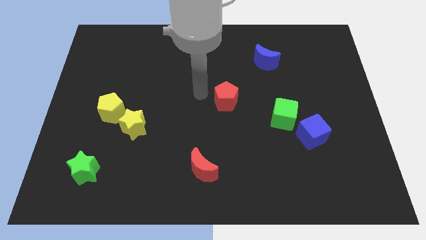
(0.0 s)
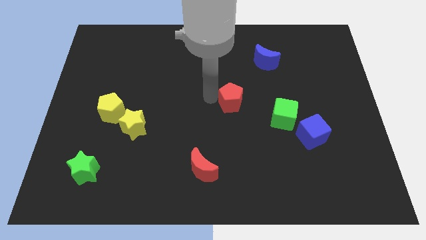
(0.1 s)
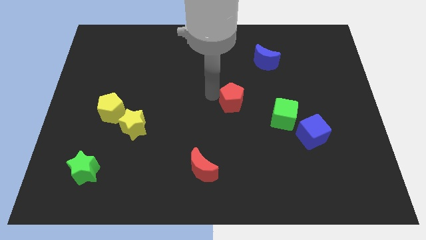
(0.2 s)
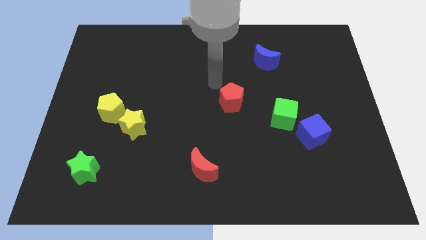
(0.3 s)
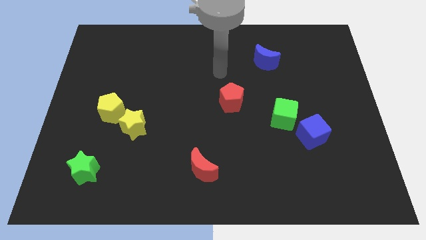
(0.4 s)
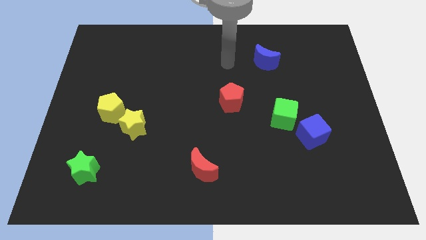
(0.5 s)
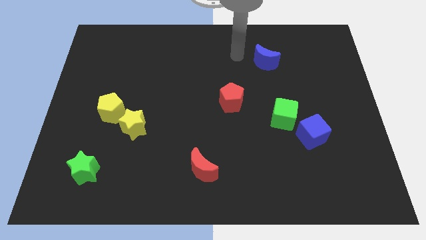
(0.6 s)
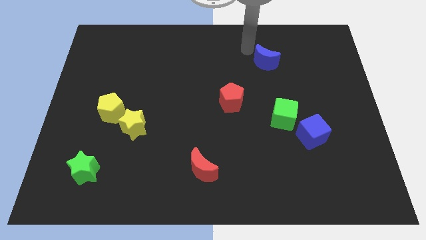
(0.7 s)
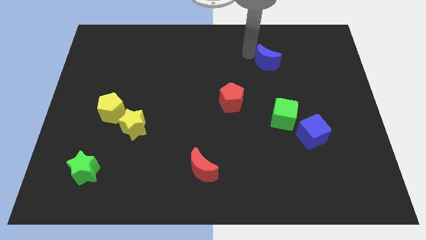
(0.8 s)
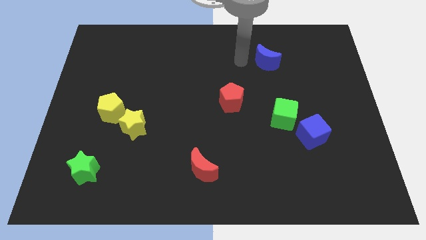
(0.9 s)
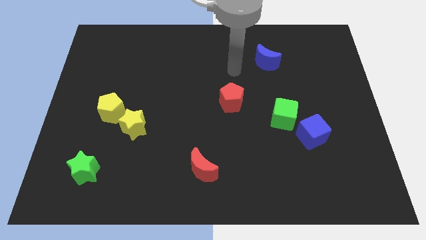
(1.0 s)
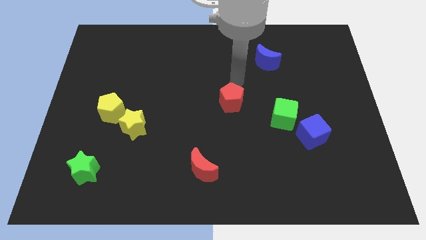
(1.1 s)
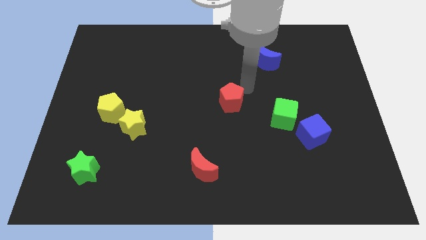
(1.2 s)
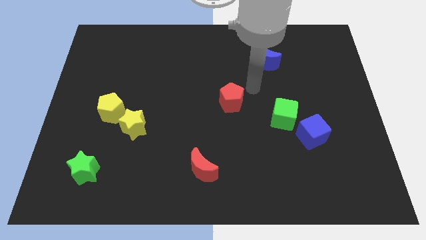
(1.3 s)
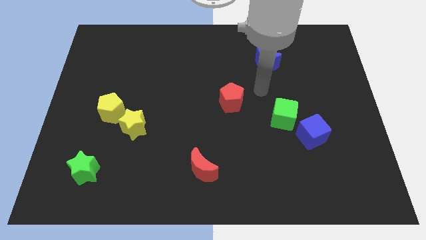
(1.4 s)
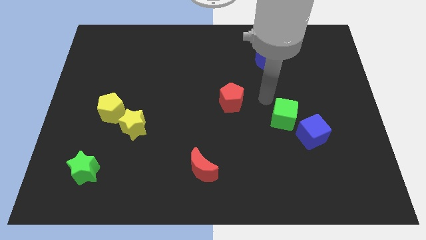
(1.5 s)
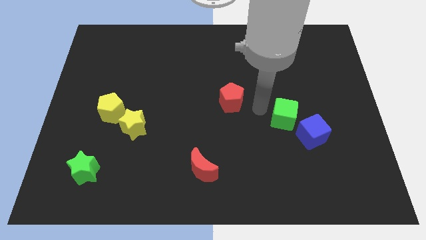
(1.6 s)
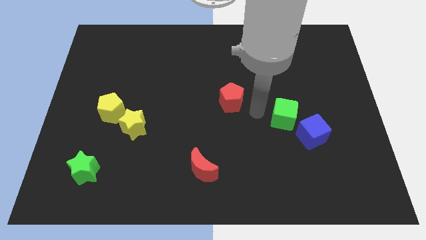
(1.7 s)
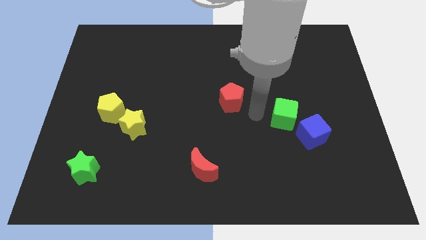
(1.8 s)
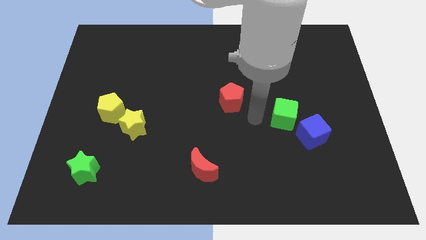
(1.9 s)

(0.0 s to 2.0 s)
move the red pentagon slightly to the right

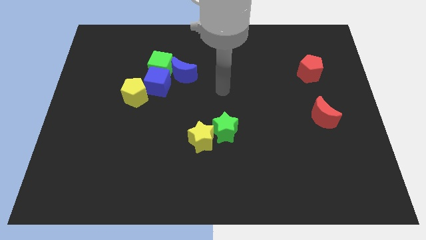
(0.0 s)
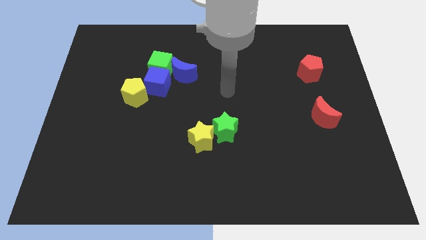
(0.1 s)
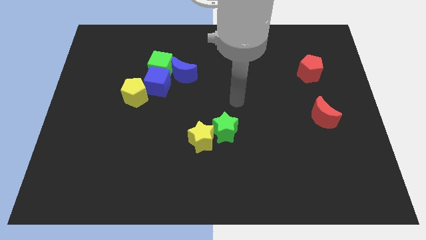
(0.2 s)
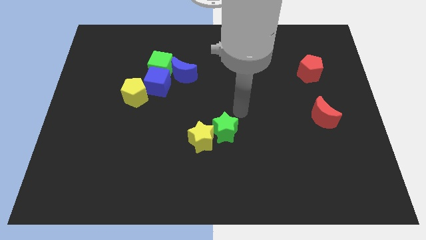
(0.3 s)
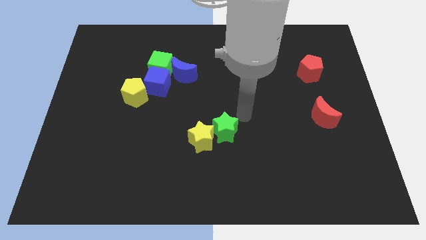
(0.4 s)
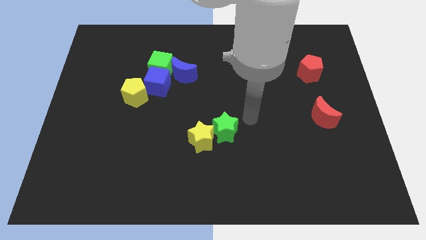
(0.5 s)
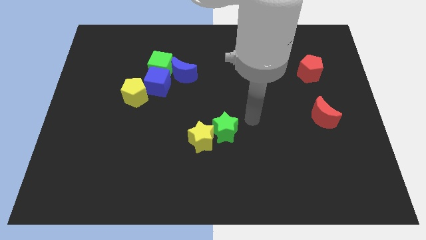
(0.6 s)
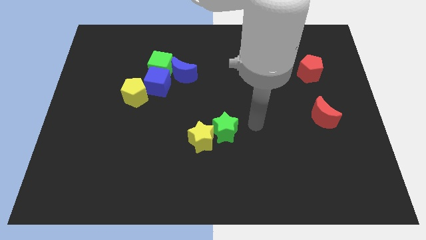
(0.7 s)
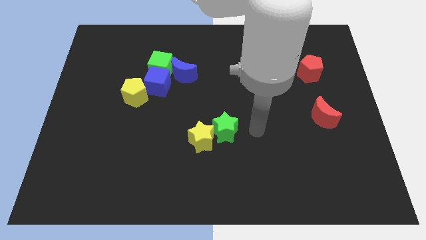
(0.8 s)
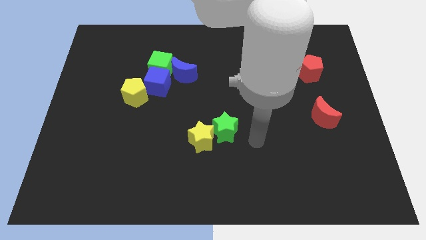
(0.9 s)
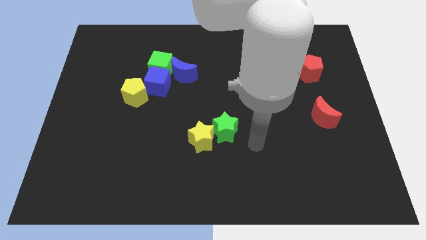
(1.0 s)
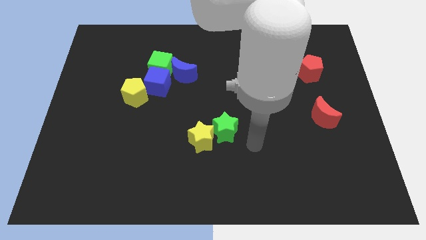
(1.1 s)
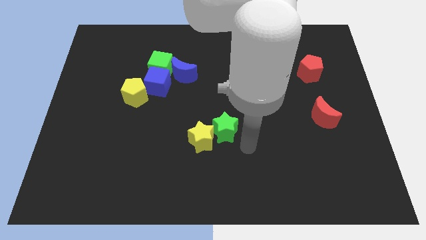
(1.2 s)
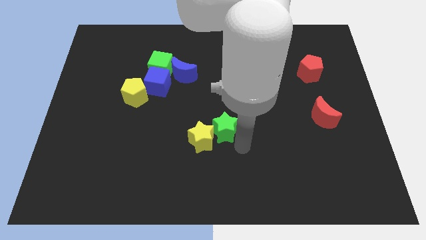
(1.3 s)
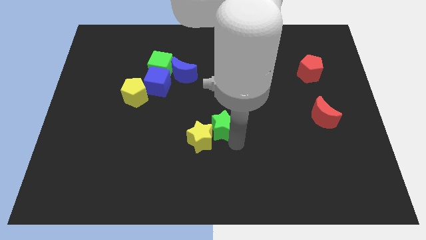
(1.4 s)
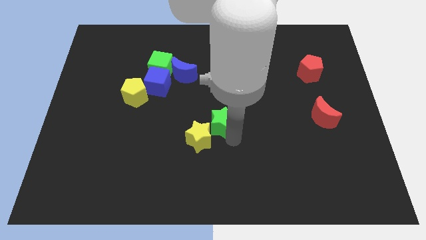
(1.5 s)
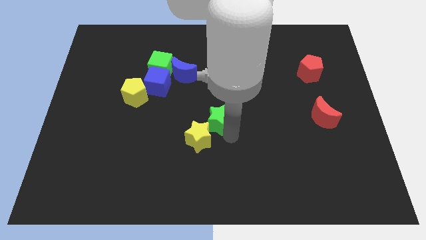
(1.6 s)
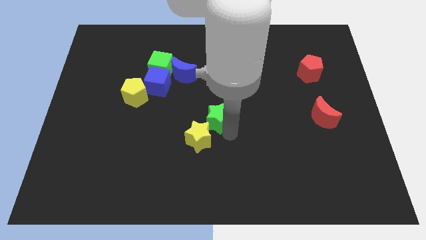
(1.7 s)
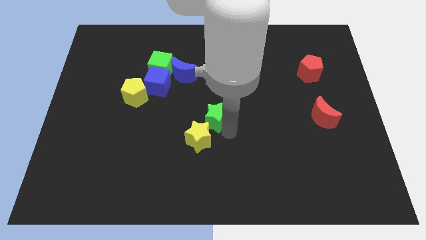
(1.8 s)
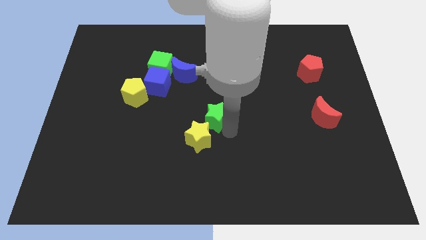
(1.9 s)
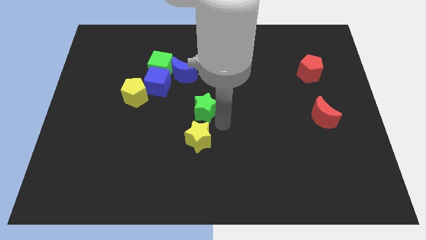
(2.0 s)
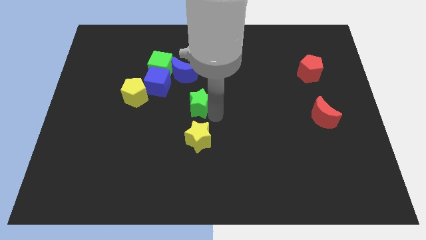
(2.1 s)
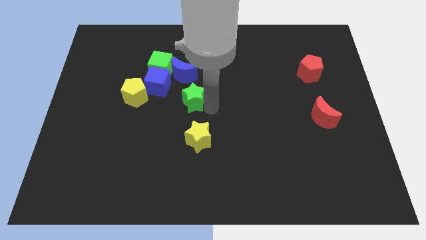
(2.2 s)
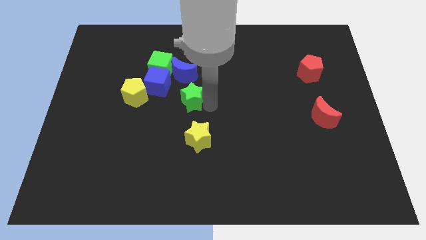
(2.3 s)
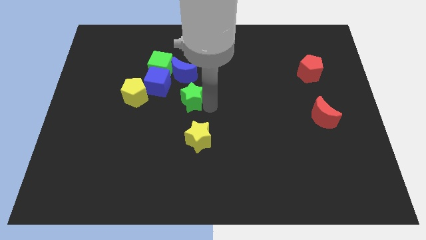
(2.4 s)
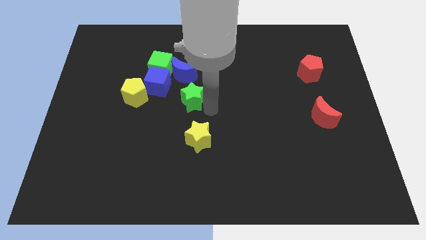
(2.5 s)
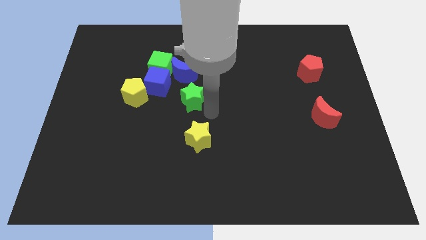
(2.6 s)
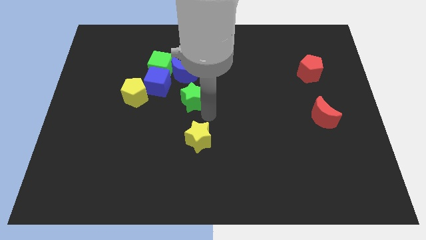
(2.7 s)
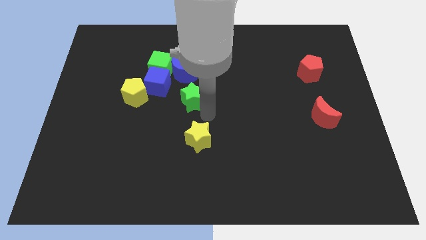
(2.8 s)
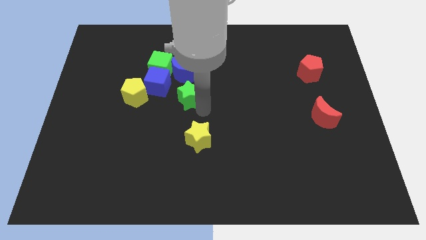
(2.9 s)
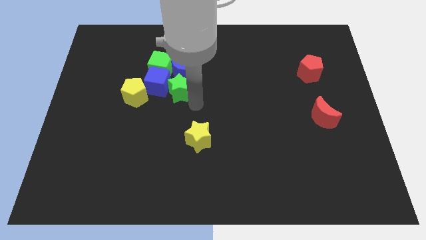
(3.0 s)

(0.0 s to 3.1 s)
move the green star close to the blue cube

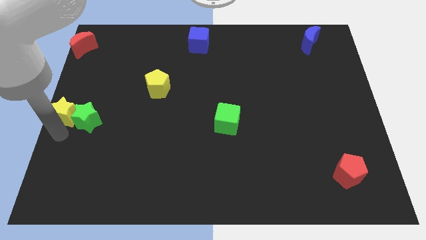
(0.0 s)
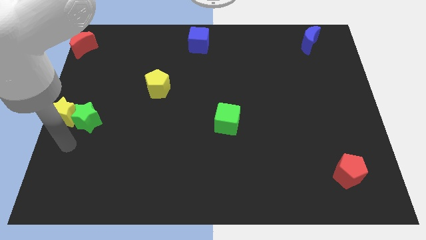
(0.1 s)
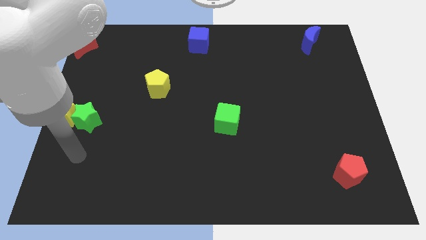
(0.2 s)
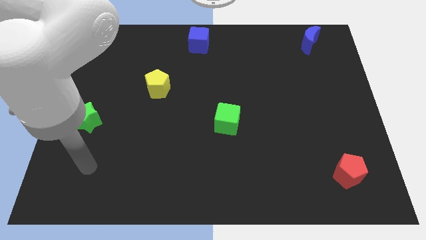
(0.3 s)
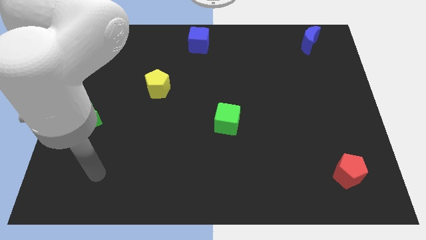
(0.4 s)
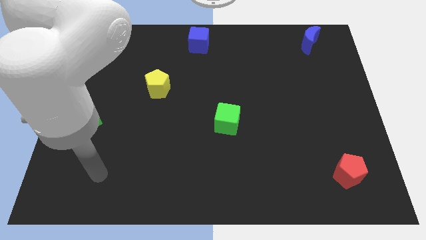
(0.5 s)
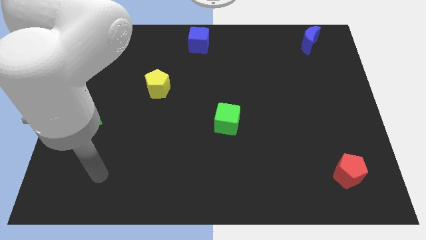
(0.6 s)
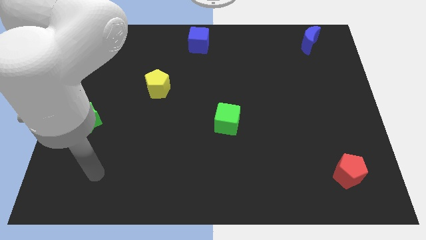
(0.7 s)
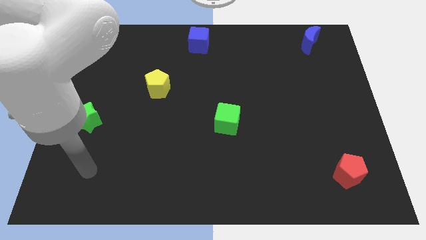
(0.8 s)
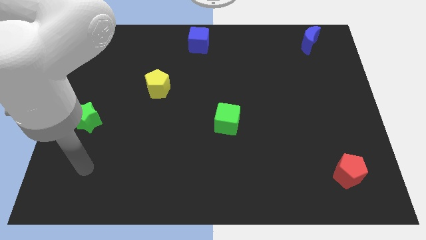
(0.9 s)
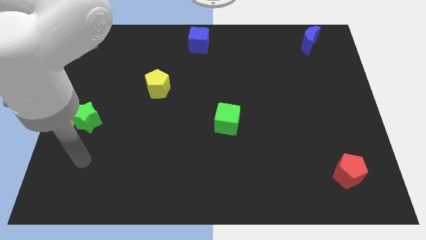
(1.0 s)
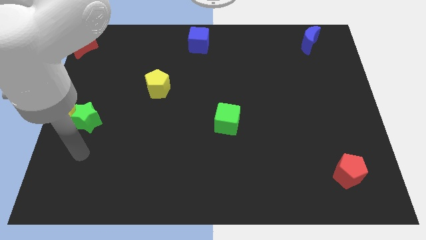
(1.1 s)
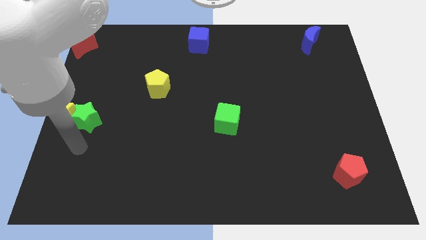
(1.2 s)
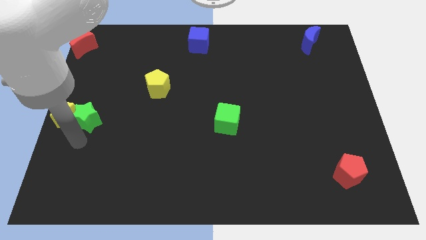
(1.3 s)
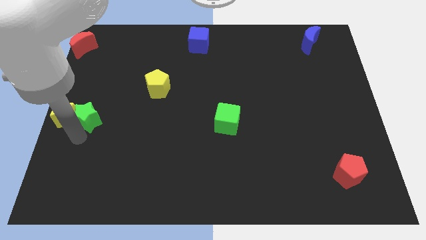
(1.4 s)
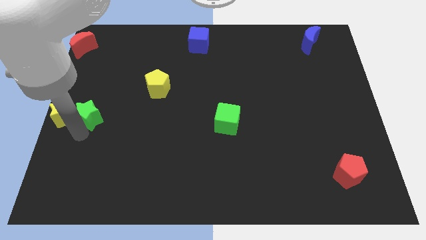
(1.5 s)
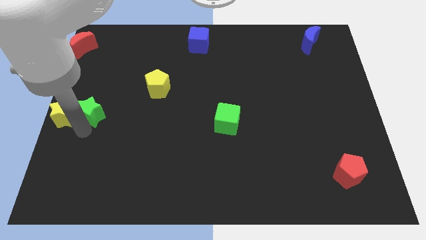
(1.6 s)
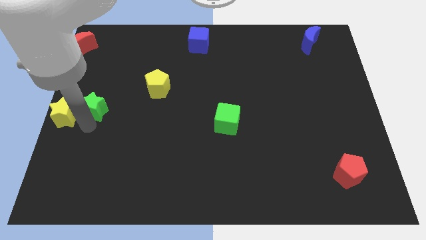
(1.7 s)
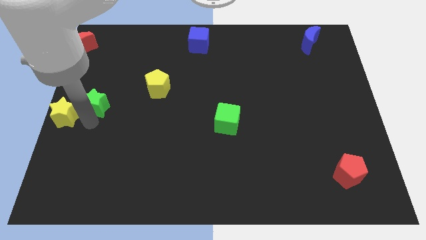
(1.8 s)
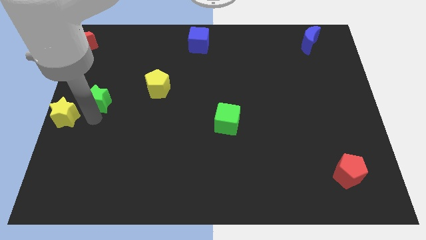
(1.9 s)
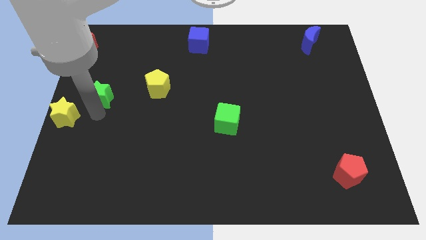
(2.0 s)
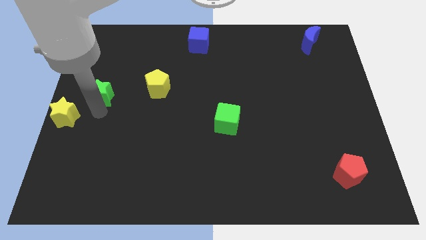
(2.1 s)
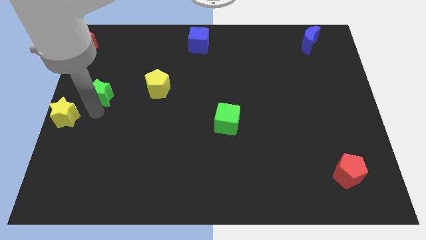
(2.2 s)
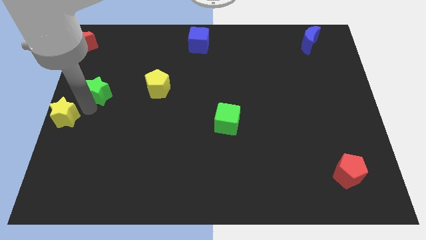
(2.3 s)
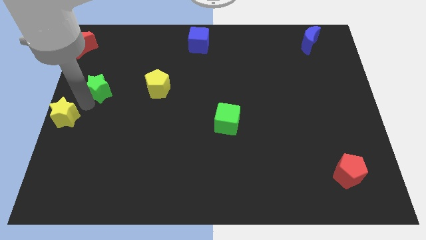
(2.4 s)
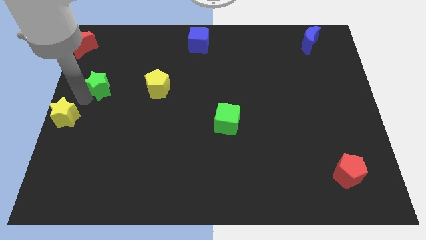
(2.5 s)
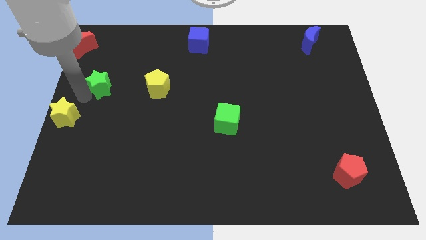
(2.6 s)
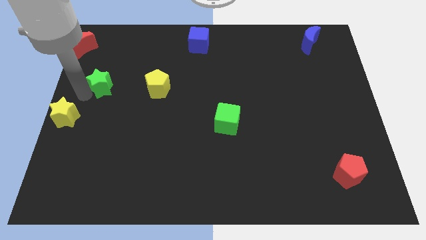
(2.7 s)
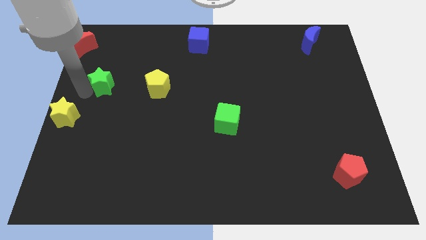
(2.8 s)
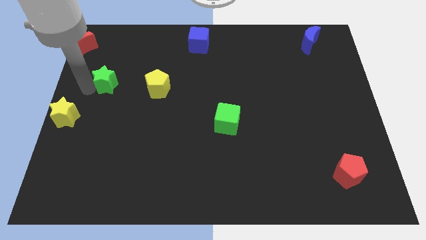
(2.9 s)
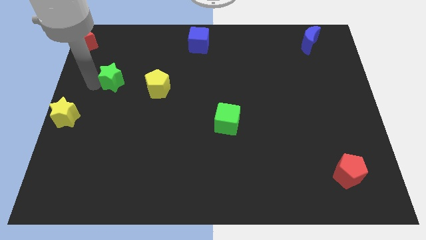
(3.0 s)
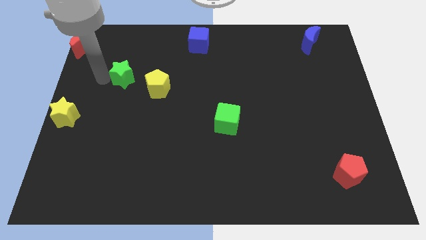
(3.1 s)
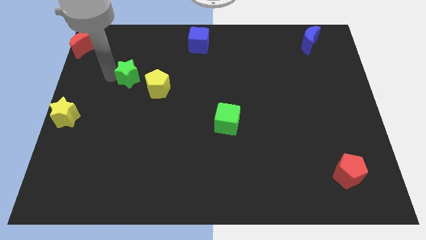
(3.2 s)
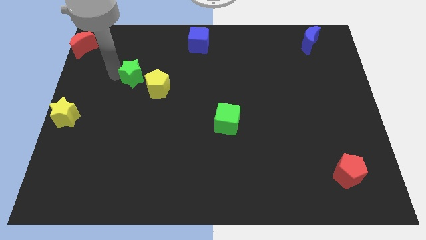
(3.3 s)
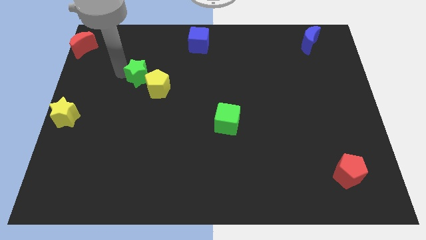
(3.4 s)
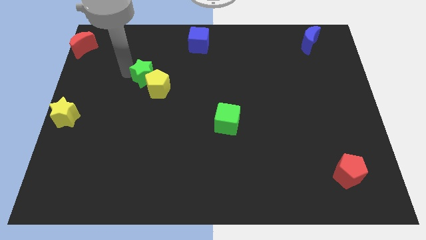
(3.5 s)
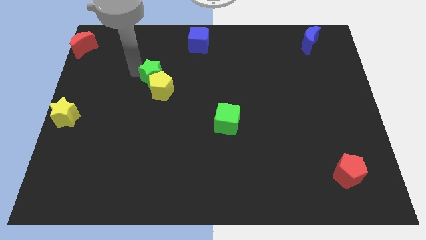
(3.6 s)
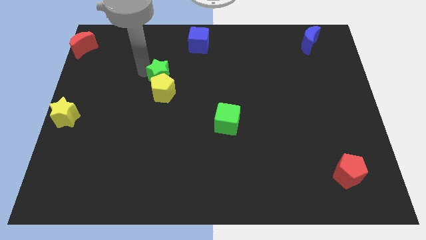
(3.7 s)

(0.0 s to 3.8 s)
move the green star into the yellow pentagon
